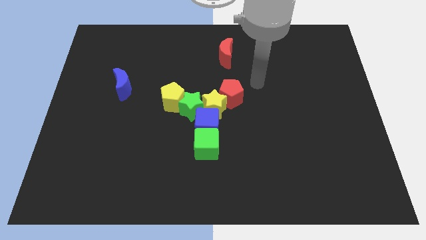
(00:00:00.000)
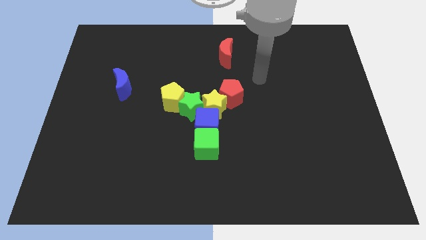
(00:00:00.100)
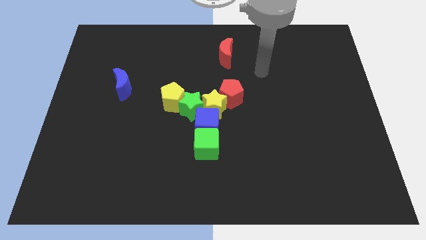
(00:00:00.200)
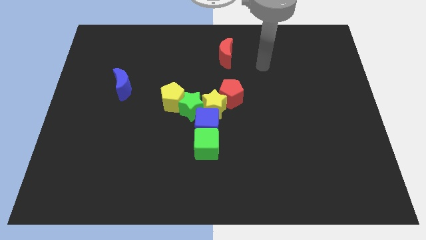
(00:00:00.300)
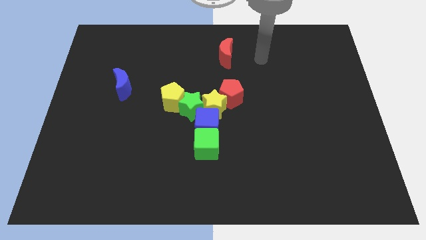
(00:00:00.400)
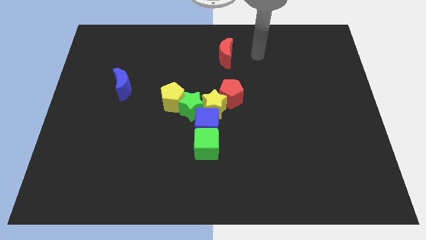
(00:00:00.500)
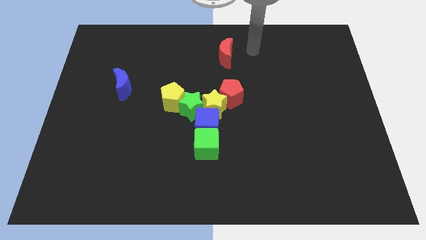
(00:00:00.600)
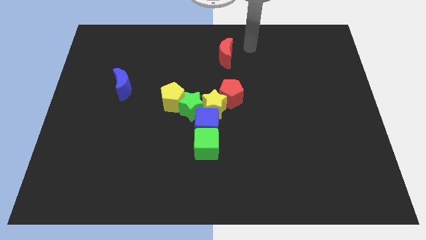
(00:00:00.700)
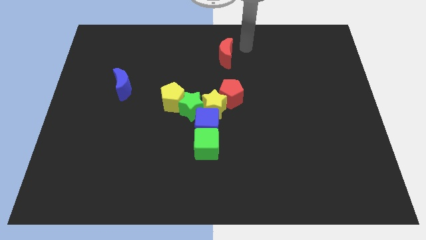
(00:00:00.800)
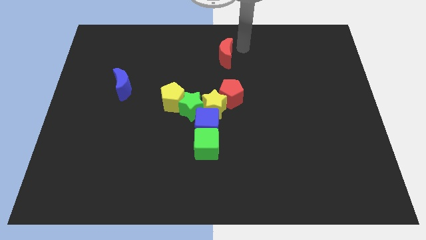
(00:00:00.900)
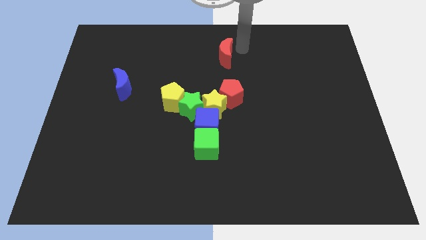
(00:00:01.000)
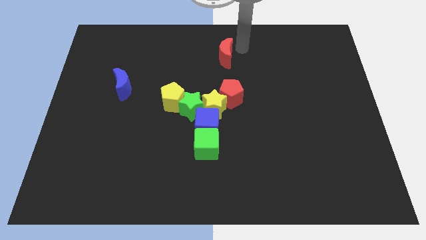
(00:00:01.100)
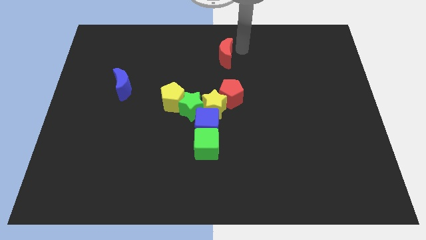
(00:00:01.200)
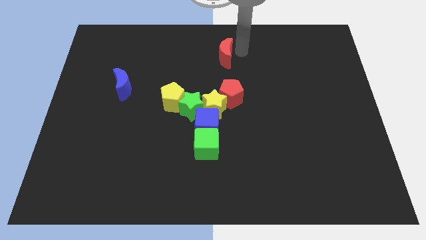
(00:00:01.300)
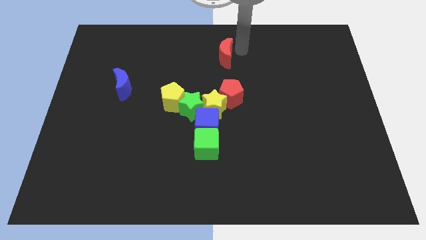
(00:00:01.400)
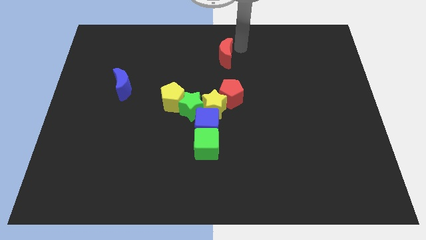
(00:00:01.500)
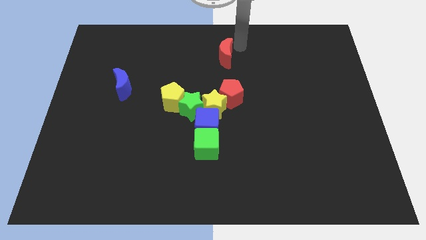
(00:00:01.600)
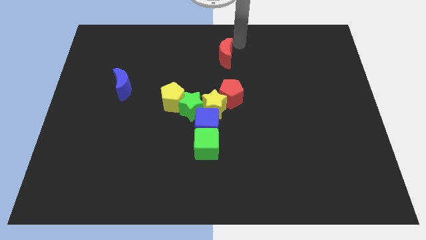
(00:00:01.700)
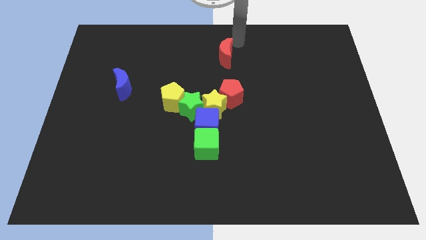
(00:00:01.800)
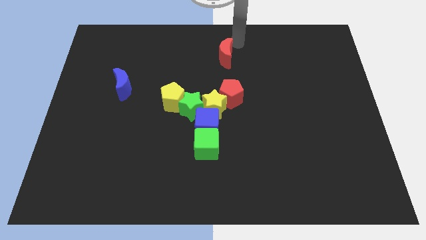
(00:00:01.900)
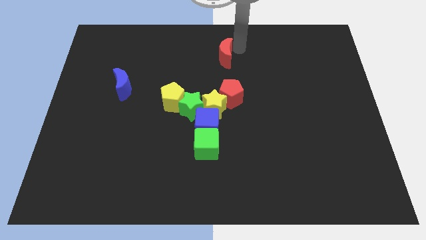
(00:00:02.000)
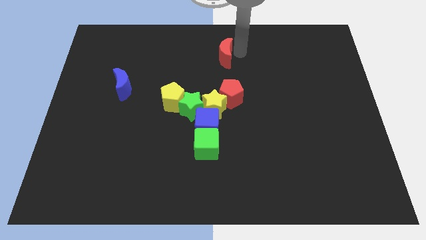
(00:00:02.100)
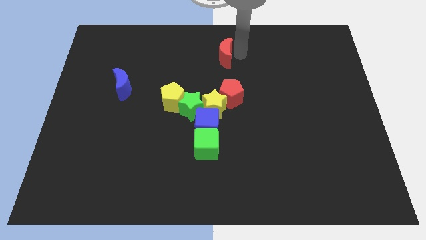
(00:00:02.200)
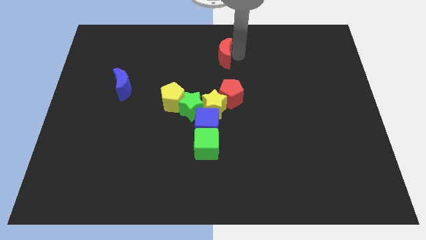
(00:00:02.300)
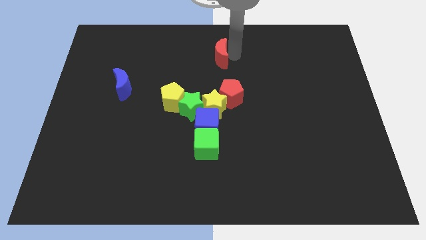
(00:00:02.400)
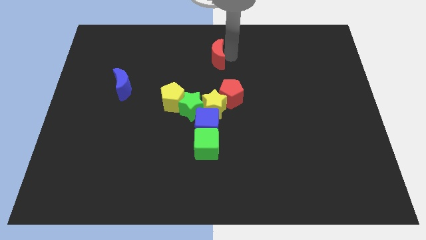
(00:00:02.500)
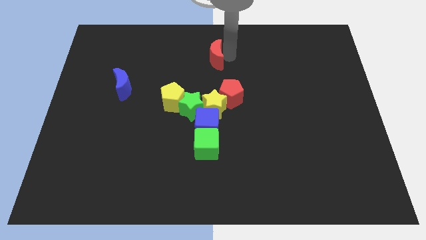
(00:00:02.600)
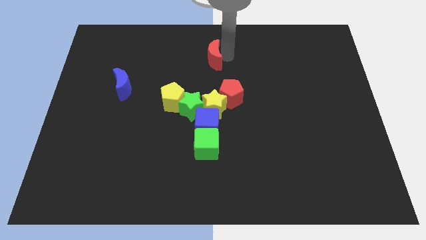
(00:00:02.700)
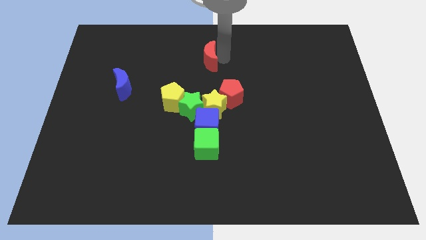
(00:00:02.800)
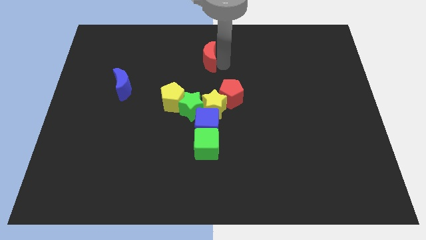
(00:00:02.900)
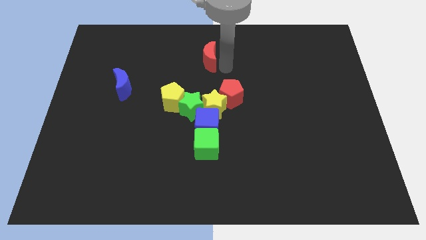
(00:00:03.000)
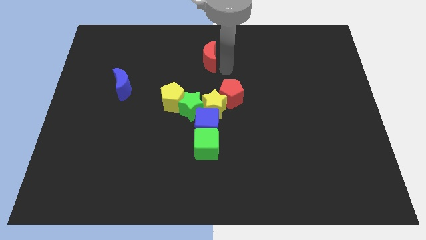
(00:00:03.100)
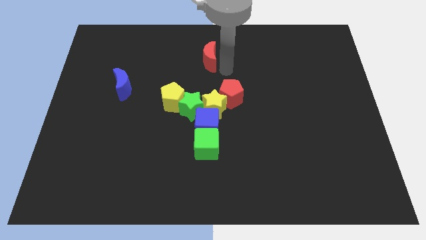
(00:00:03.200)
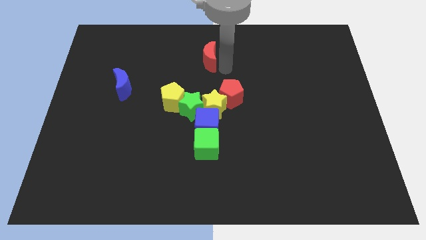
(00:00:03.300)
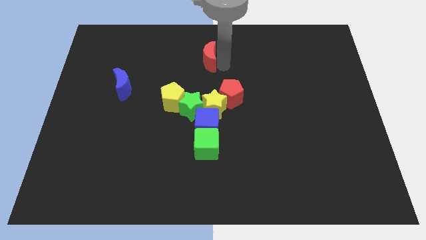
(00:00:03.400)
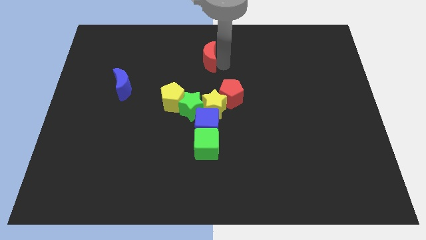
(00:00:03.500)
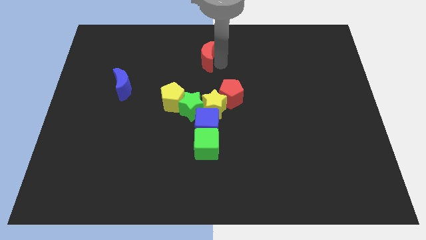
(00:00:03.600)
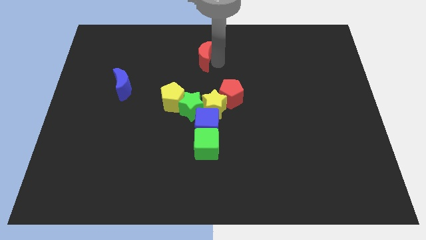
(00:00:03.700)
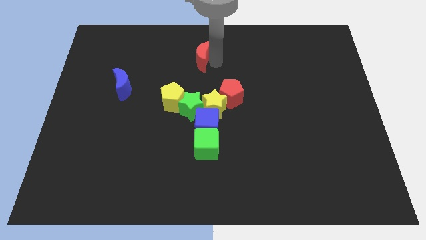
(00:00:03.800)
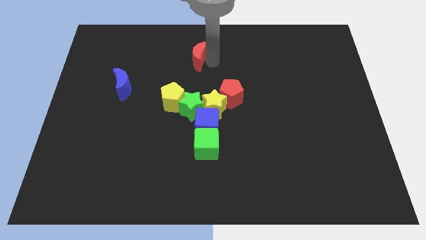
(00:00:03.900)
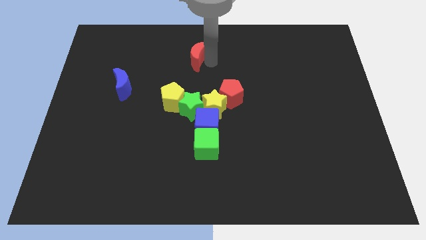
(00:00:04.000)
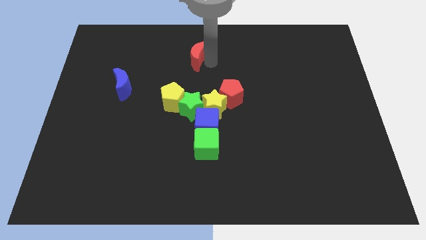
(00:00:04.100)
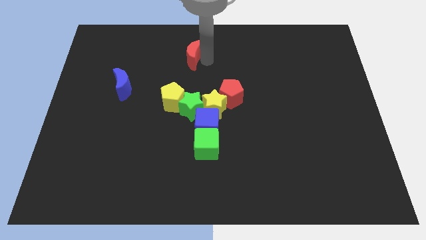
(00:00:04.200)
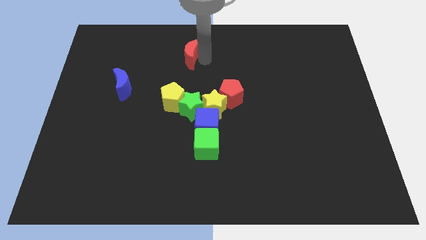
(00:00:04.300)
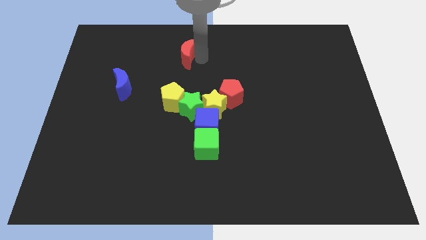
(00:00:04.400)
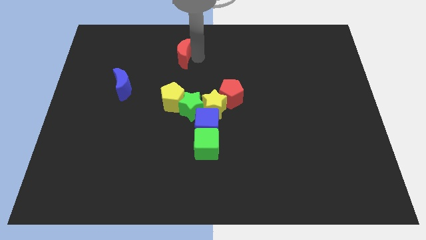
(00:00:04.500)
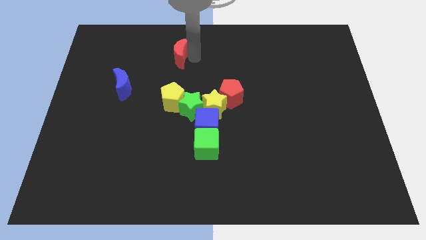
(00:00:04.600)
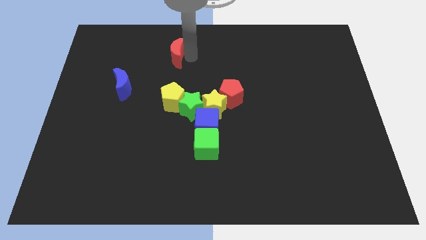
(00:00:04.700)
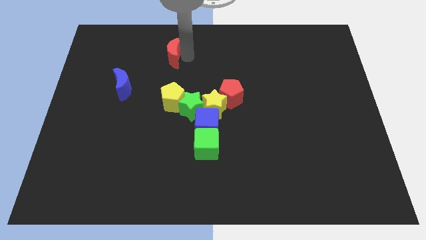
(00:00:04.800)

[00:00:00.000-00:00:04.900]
place the red crescent vertically to the top side of the yellow pentagon

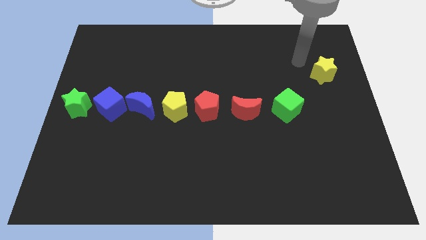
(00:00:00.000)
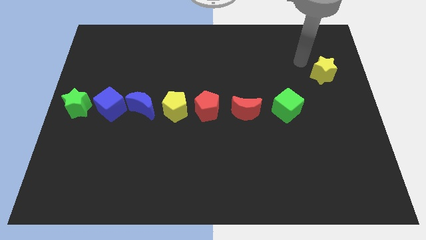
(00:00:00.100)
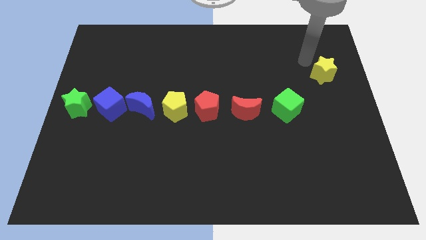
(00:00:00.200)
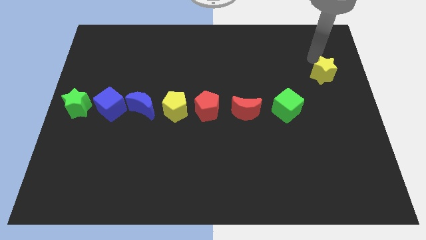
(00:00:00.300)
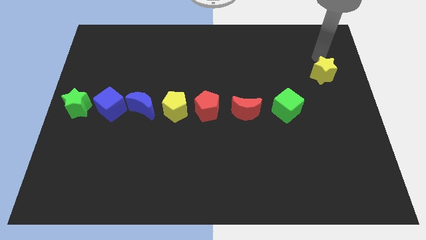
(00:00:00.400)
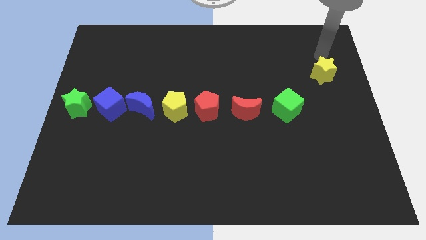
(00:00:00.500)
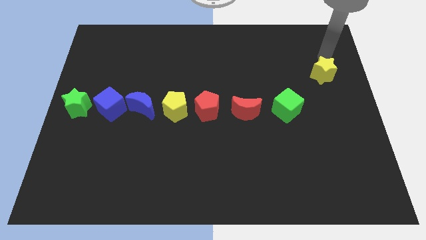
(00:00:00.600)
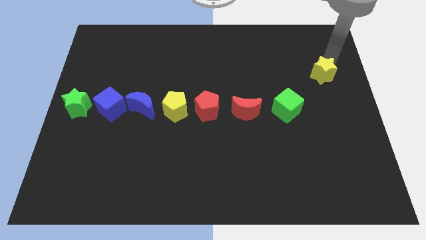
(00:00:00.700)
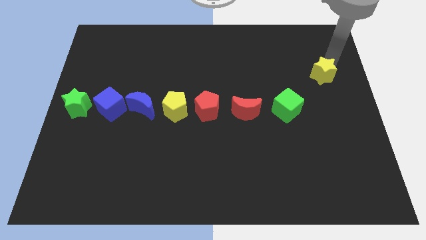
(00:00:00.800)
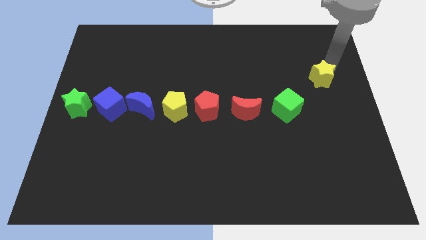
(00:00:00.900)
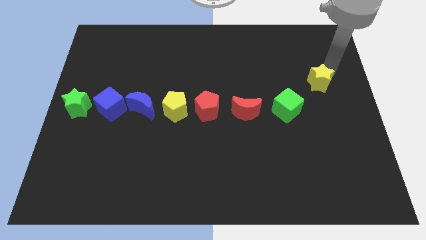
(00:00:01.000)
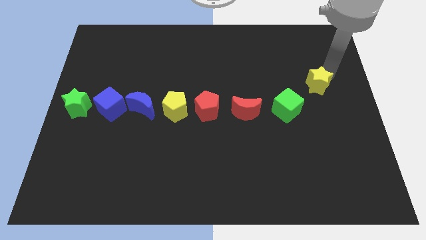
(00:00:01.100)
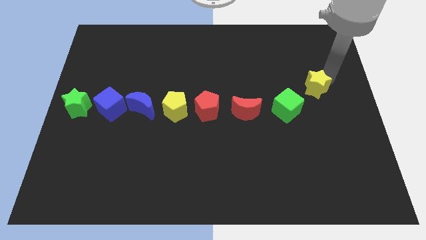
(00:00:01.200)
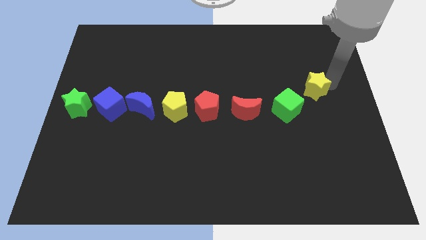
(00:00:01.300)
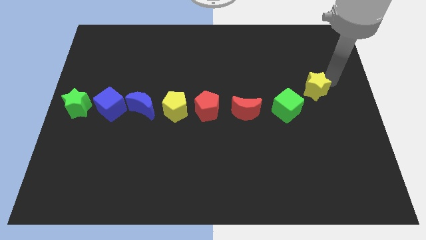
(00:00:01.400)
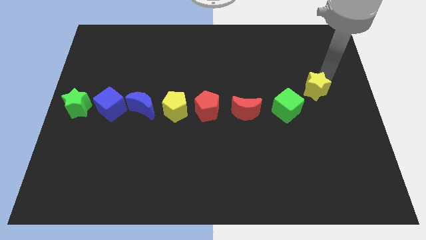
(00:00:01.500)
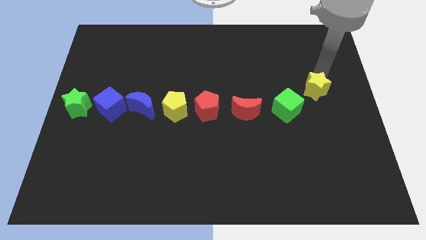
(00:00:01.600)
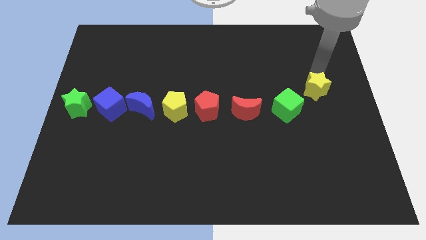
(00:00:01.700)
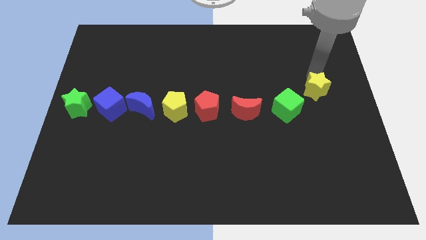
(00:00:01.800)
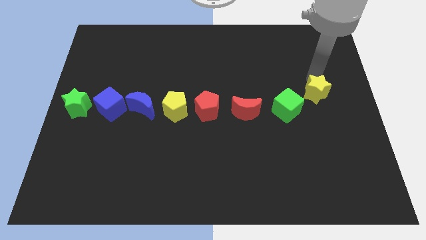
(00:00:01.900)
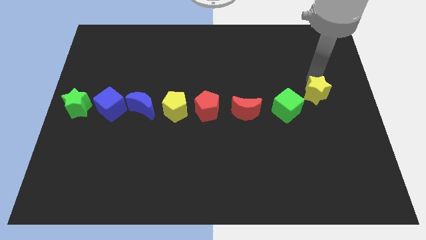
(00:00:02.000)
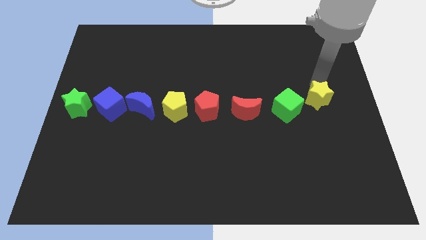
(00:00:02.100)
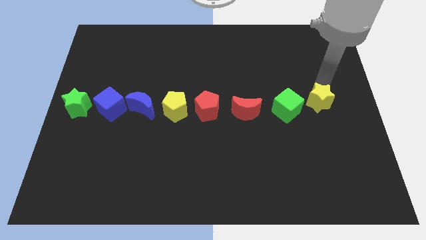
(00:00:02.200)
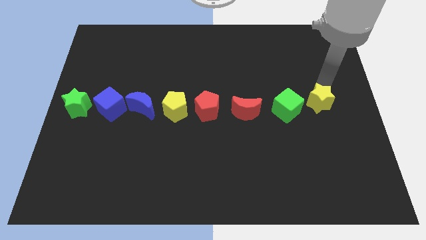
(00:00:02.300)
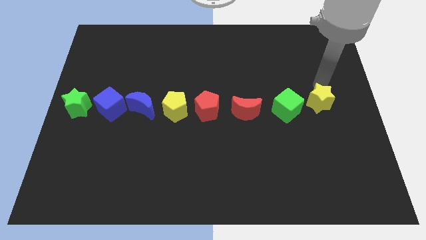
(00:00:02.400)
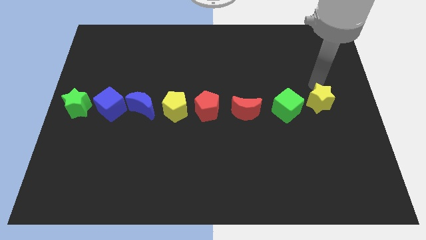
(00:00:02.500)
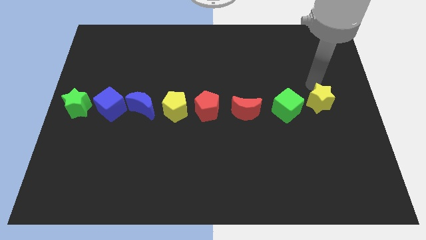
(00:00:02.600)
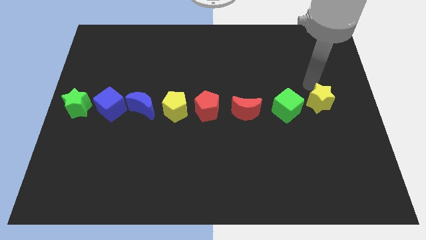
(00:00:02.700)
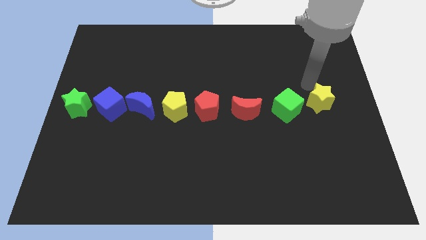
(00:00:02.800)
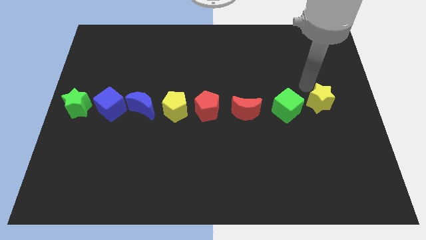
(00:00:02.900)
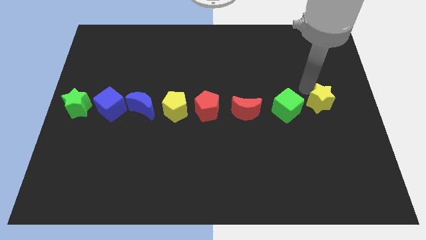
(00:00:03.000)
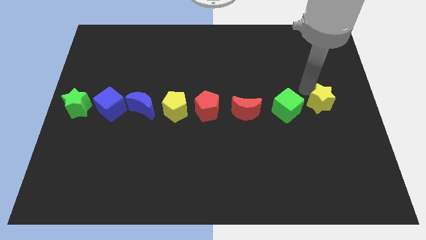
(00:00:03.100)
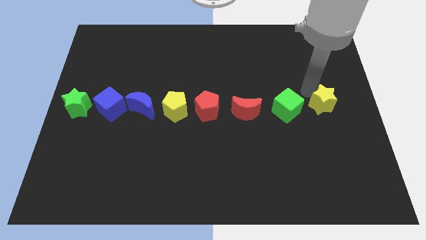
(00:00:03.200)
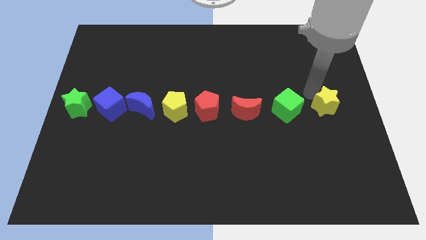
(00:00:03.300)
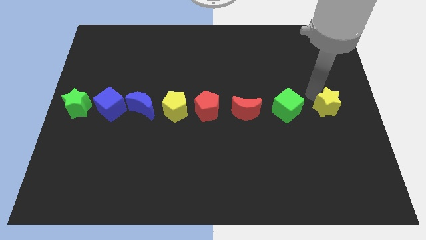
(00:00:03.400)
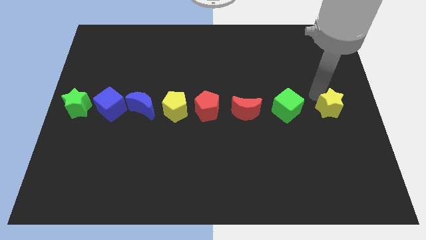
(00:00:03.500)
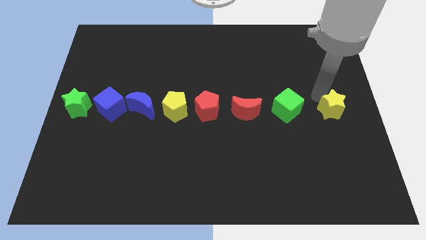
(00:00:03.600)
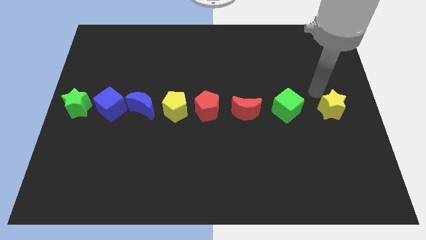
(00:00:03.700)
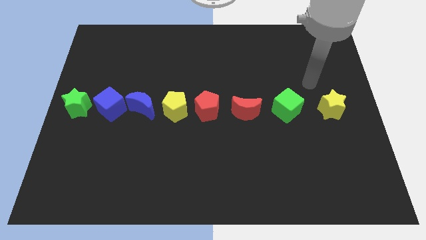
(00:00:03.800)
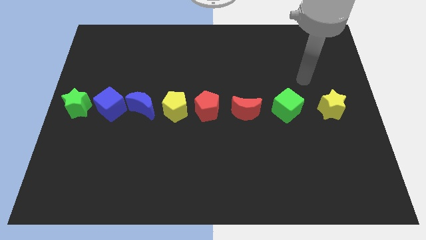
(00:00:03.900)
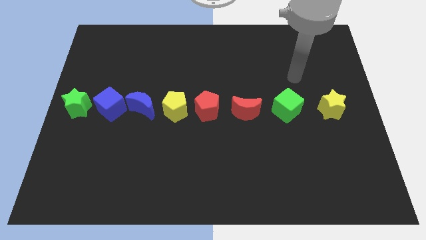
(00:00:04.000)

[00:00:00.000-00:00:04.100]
push the yellow star downward
